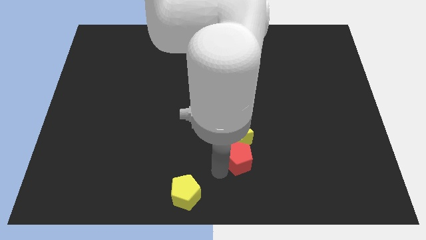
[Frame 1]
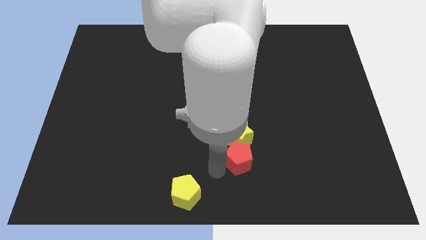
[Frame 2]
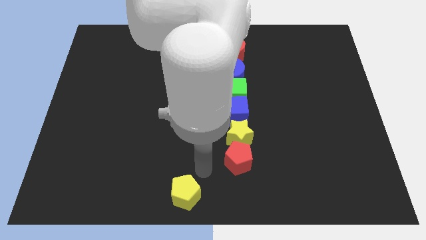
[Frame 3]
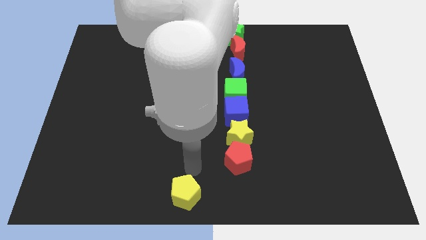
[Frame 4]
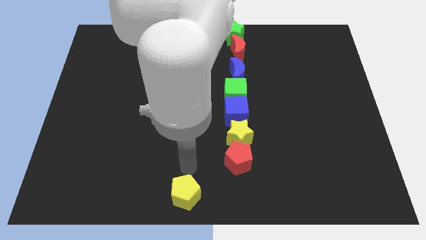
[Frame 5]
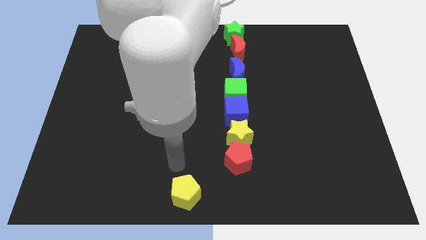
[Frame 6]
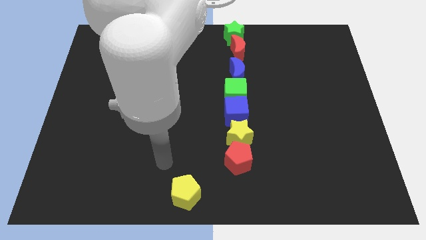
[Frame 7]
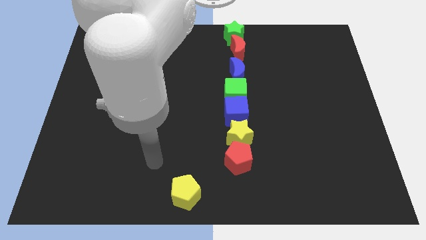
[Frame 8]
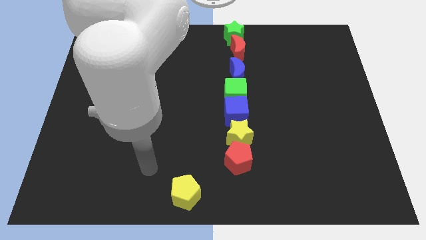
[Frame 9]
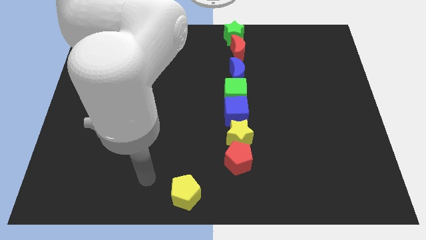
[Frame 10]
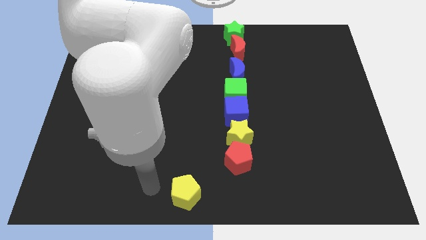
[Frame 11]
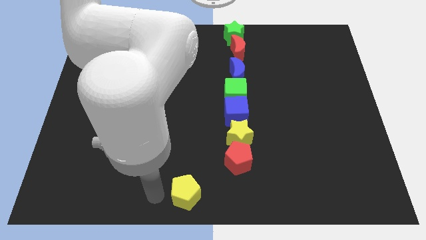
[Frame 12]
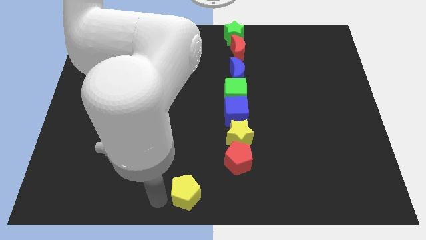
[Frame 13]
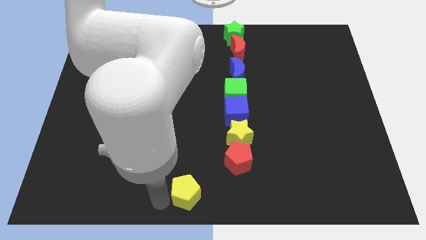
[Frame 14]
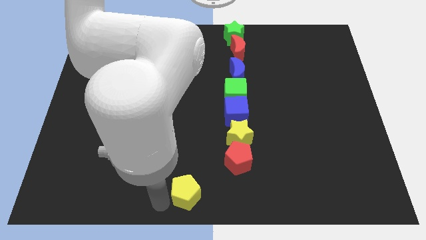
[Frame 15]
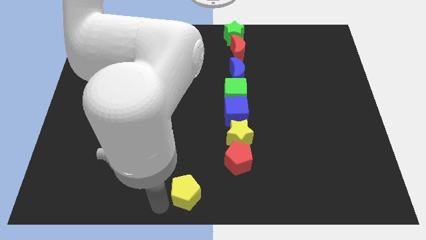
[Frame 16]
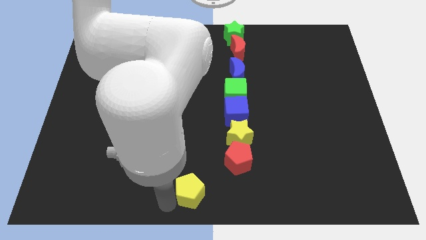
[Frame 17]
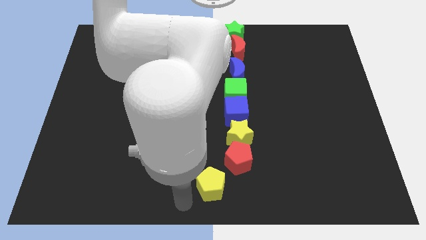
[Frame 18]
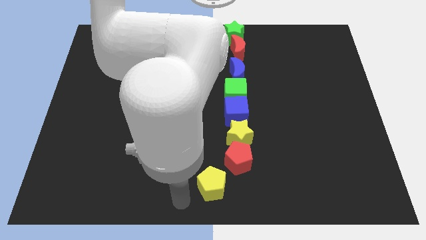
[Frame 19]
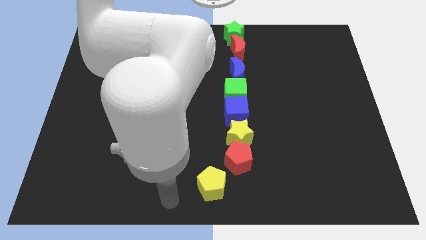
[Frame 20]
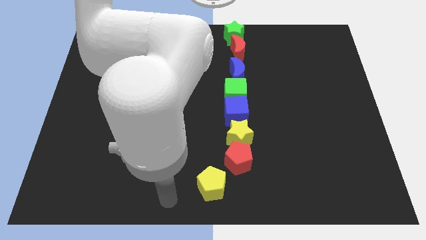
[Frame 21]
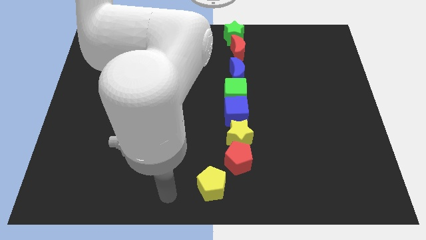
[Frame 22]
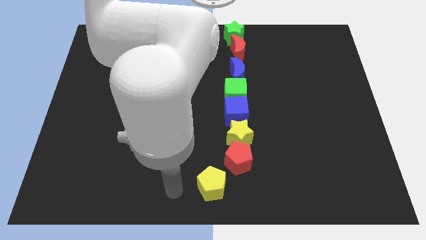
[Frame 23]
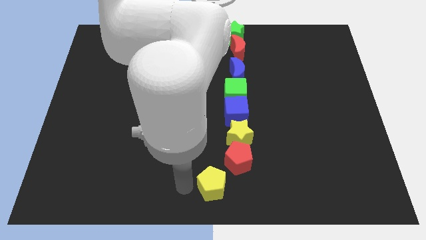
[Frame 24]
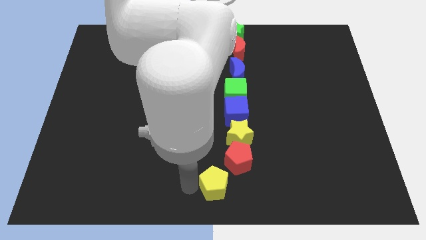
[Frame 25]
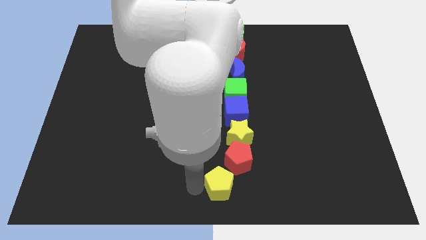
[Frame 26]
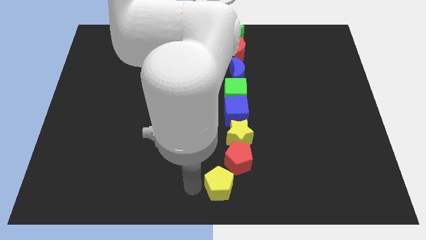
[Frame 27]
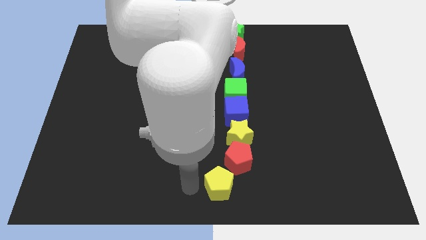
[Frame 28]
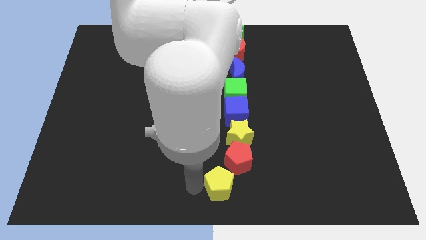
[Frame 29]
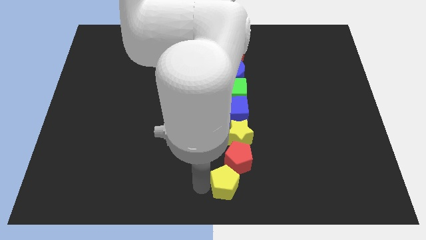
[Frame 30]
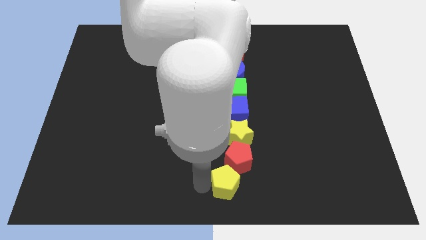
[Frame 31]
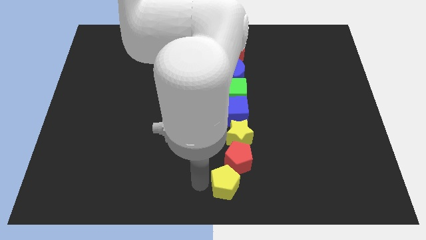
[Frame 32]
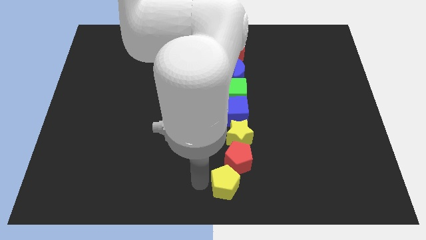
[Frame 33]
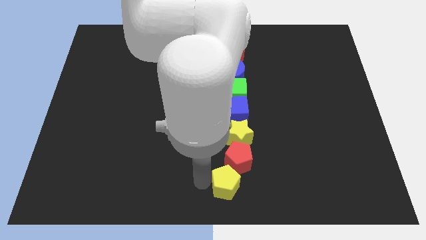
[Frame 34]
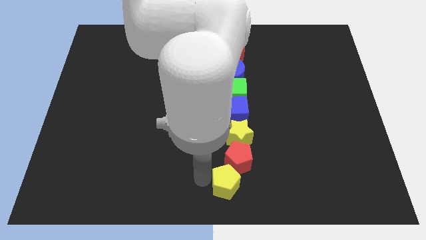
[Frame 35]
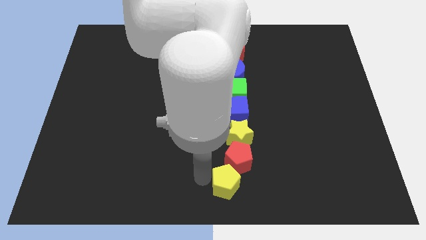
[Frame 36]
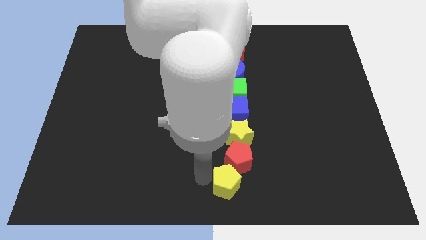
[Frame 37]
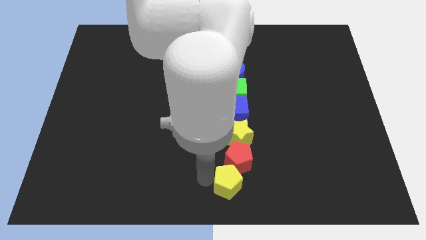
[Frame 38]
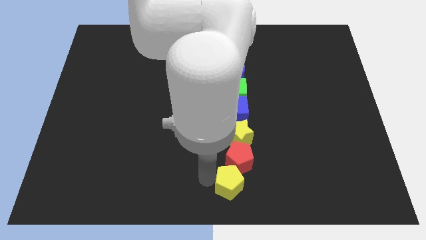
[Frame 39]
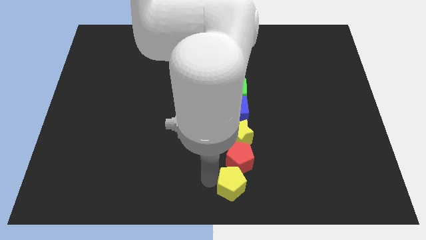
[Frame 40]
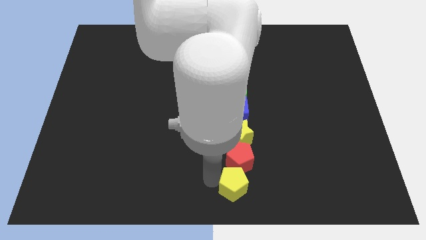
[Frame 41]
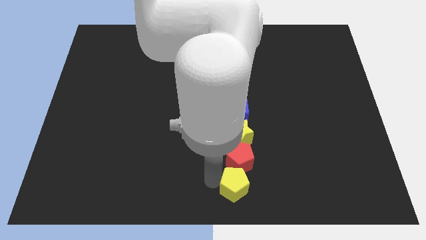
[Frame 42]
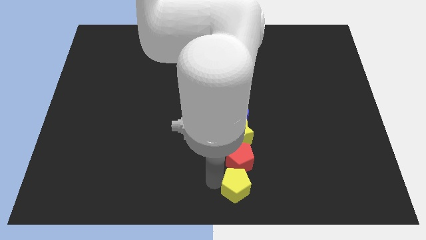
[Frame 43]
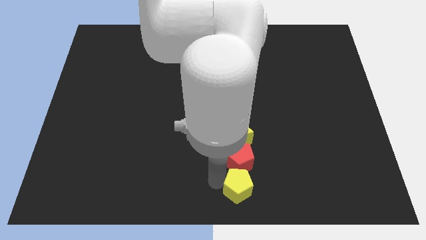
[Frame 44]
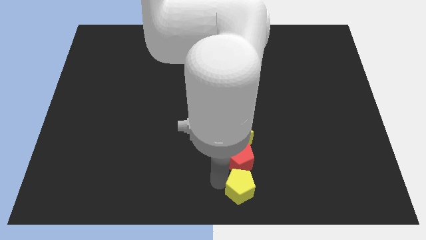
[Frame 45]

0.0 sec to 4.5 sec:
move the yellow pentagon to the bottom of the red pentagon

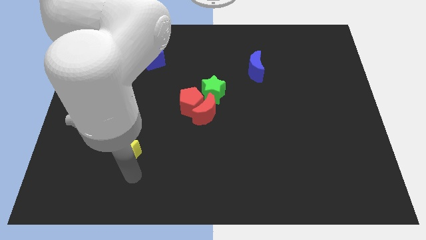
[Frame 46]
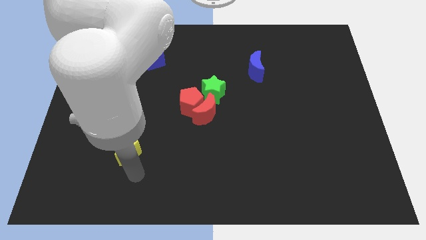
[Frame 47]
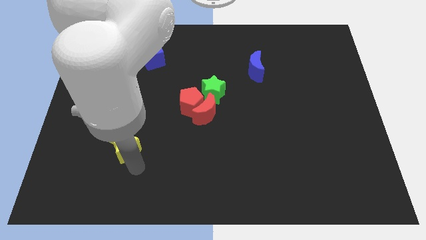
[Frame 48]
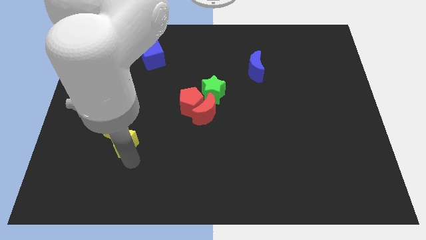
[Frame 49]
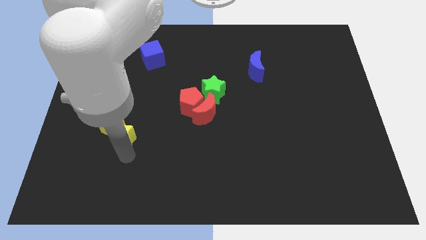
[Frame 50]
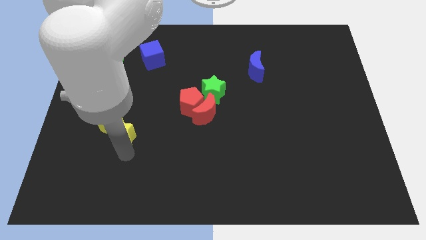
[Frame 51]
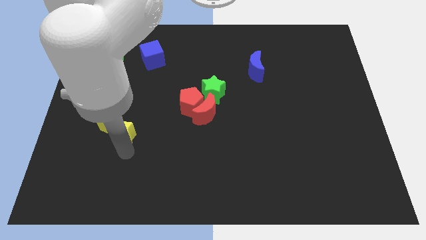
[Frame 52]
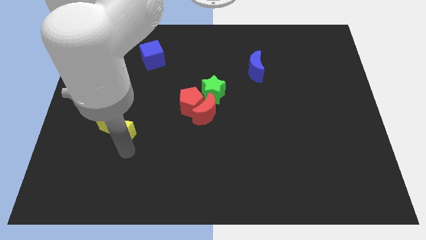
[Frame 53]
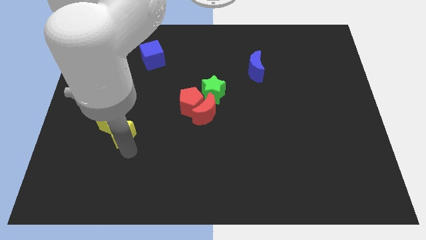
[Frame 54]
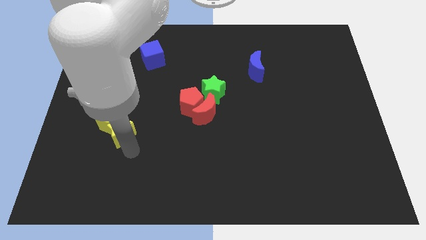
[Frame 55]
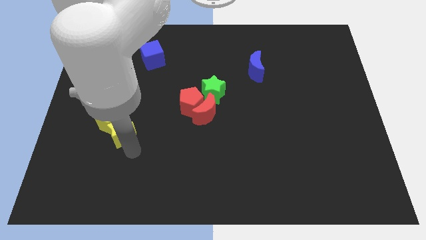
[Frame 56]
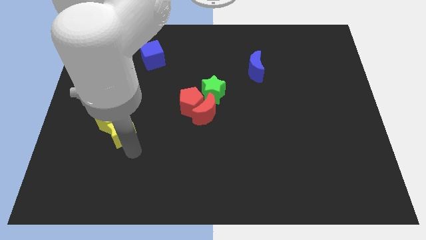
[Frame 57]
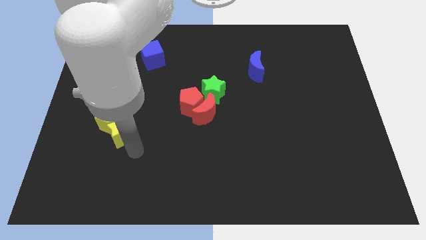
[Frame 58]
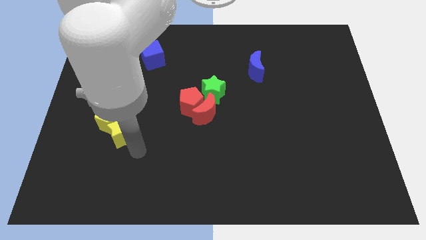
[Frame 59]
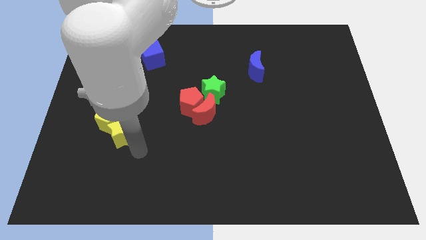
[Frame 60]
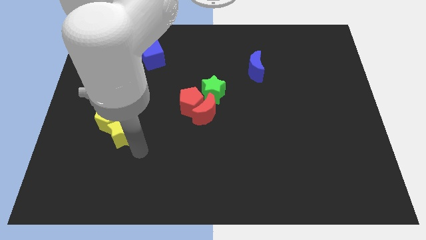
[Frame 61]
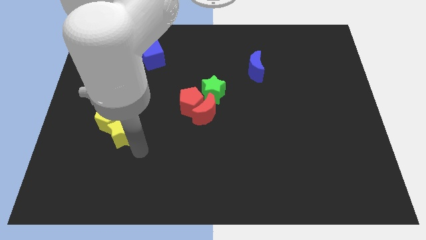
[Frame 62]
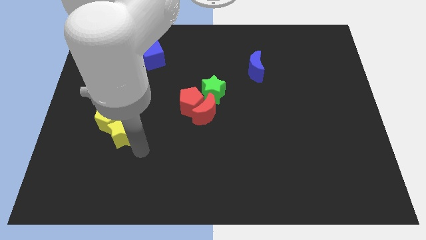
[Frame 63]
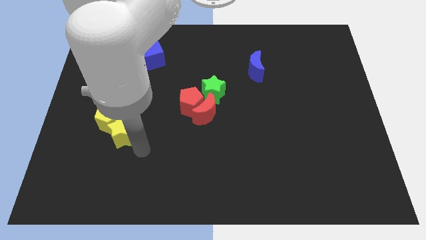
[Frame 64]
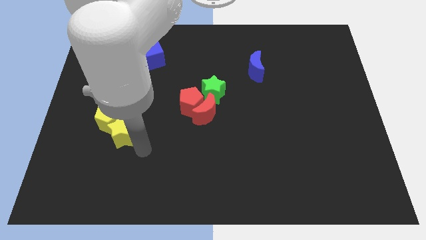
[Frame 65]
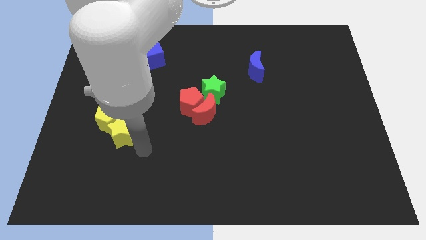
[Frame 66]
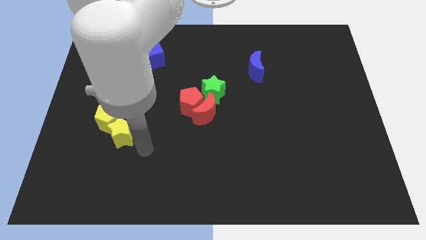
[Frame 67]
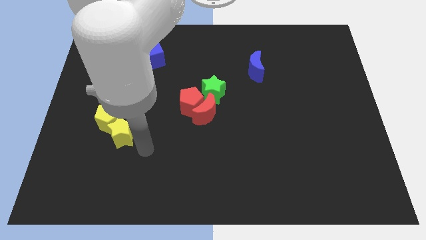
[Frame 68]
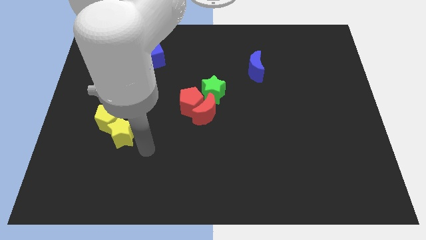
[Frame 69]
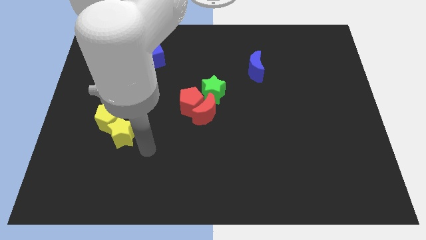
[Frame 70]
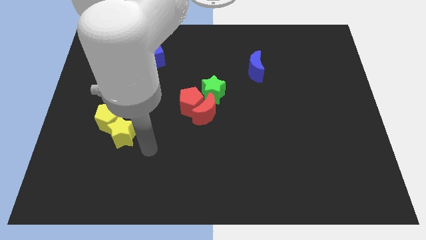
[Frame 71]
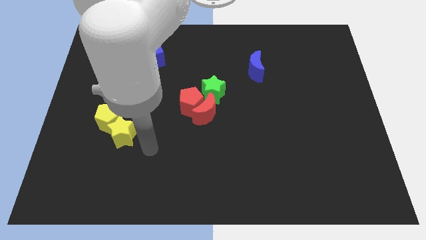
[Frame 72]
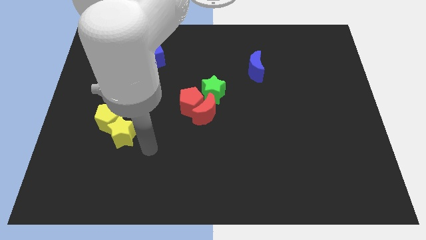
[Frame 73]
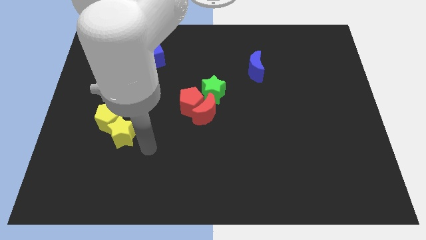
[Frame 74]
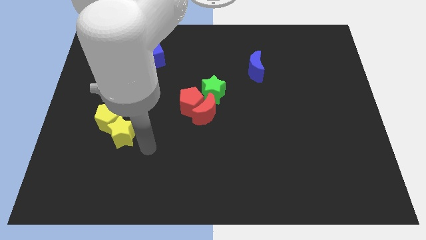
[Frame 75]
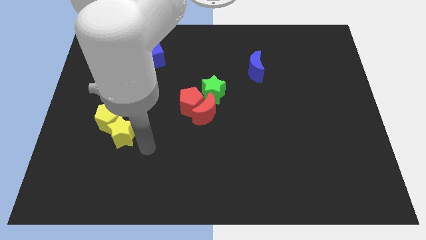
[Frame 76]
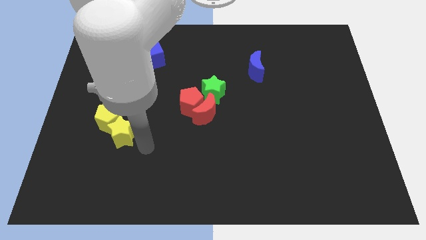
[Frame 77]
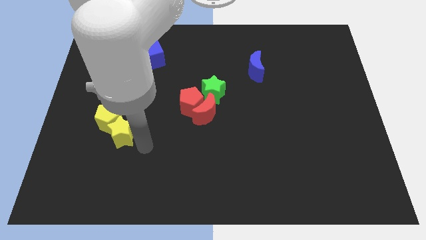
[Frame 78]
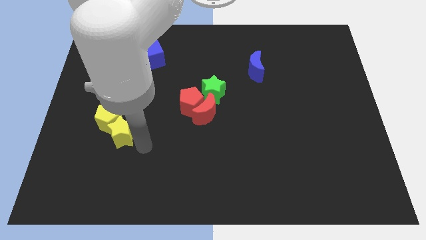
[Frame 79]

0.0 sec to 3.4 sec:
push the yellow blocks to the left side

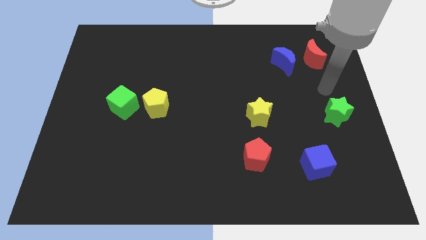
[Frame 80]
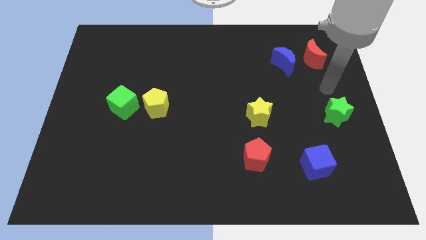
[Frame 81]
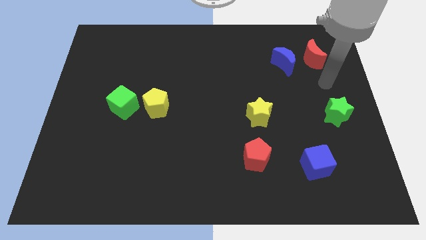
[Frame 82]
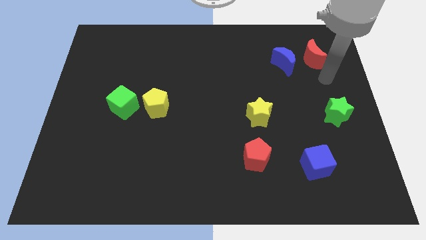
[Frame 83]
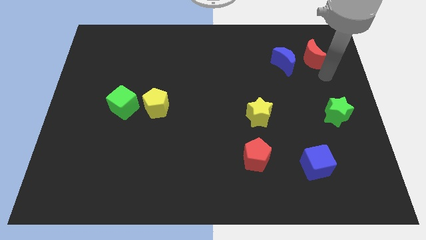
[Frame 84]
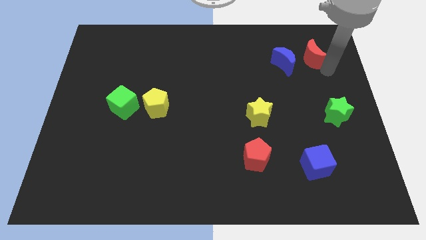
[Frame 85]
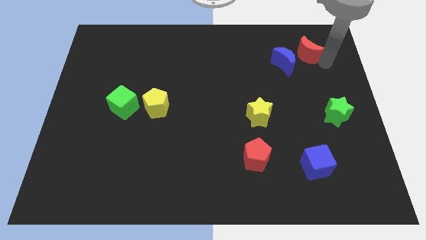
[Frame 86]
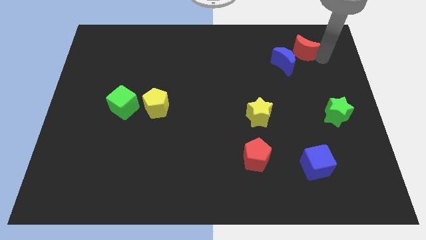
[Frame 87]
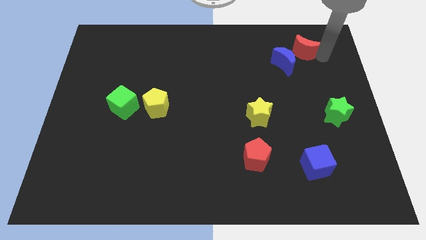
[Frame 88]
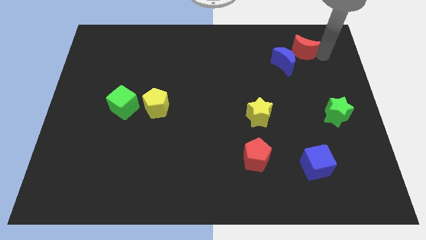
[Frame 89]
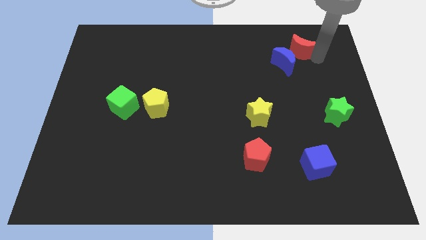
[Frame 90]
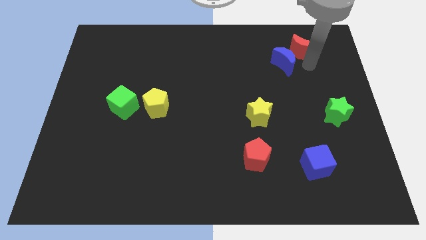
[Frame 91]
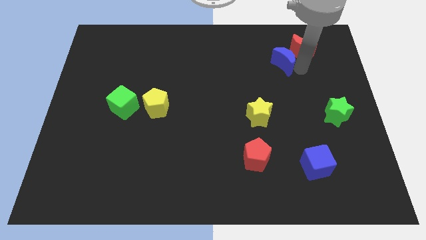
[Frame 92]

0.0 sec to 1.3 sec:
push the red crescent slightly to the top side of the board
